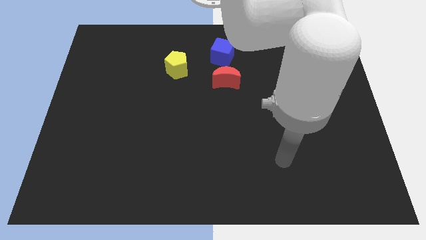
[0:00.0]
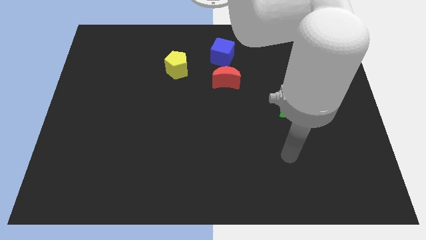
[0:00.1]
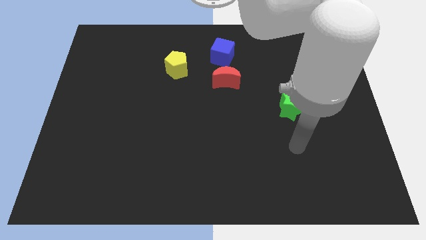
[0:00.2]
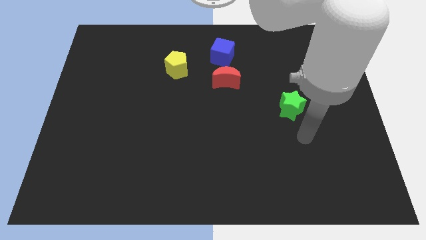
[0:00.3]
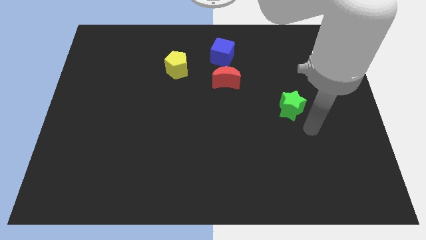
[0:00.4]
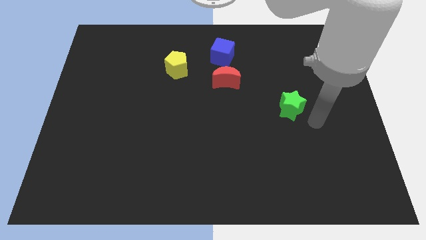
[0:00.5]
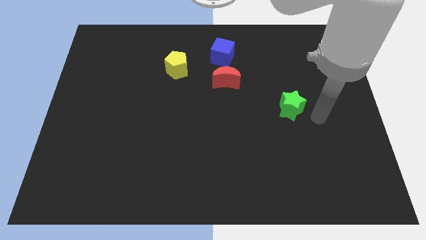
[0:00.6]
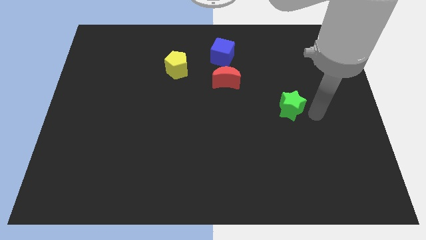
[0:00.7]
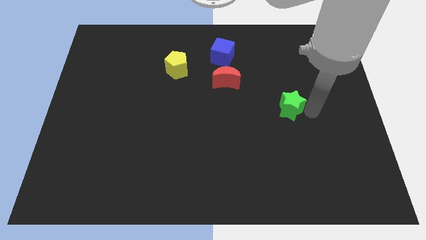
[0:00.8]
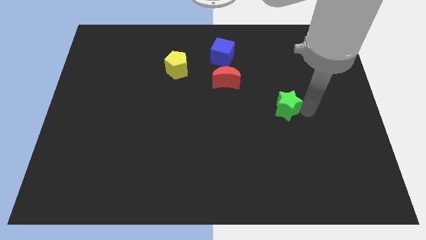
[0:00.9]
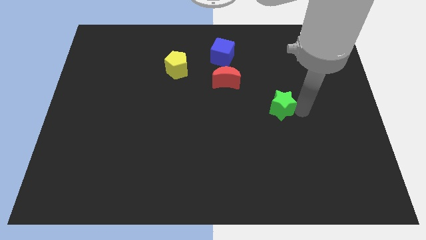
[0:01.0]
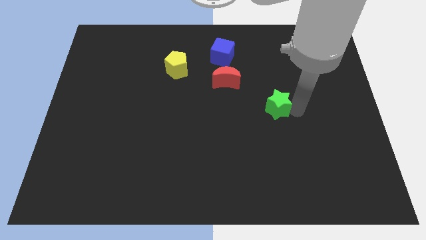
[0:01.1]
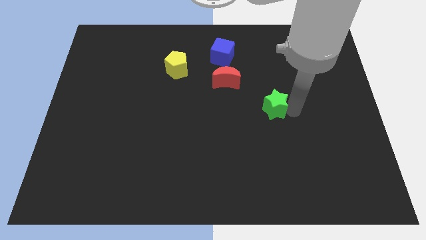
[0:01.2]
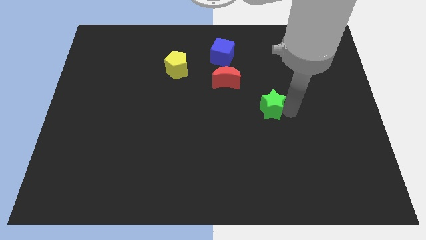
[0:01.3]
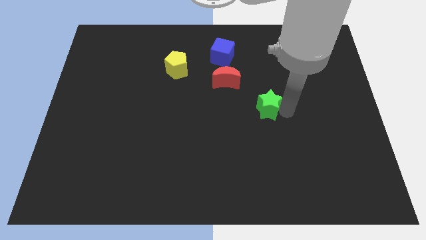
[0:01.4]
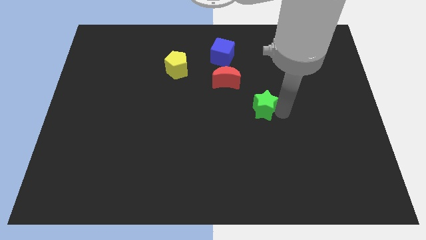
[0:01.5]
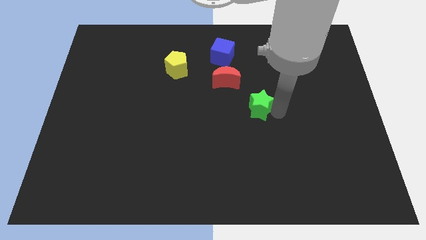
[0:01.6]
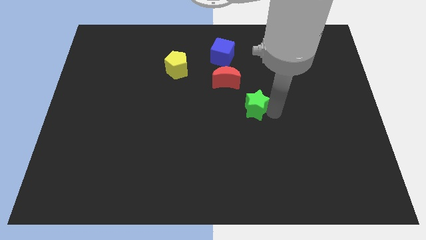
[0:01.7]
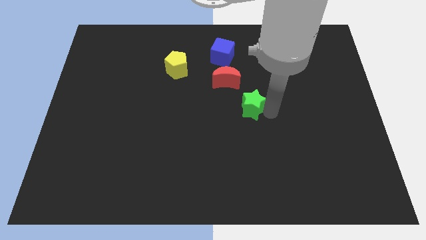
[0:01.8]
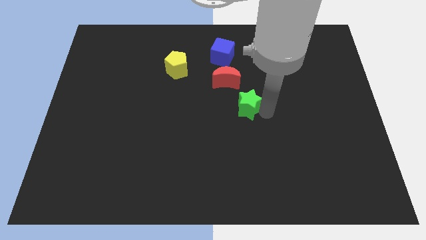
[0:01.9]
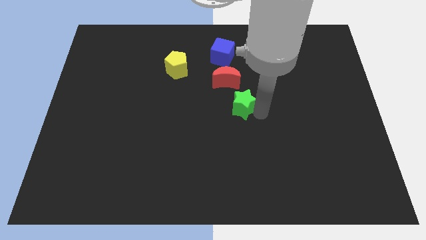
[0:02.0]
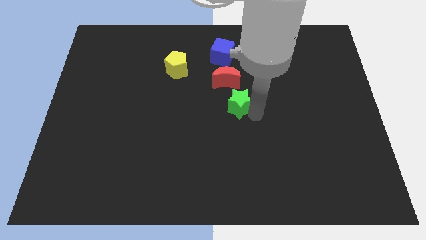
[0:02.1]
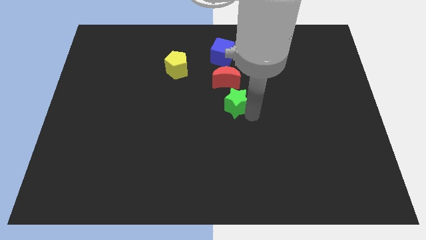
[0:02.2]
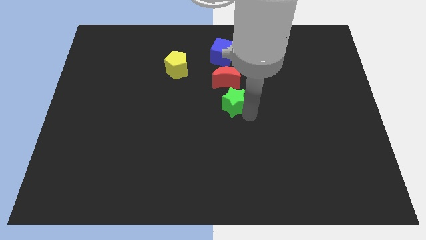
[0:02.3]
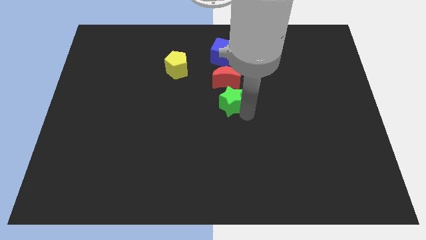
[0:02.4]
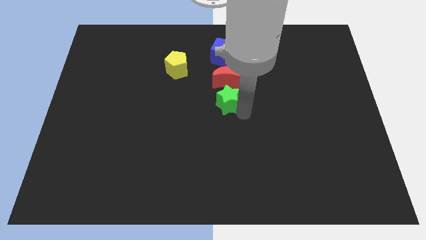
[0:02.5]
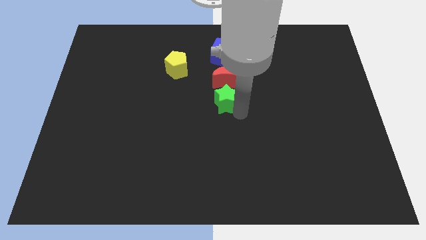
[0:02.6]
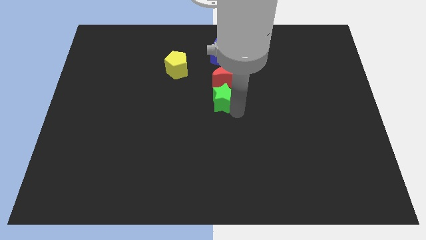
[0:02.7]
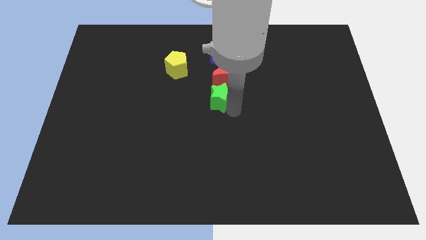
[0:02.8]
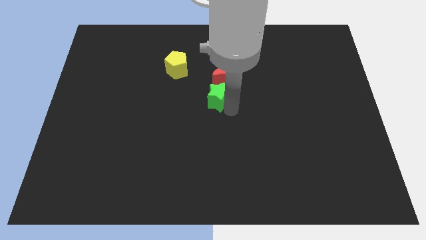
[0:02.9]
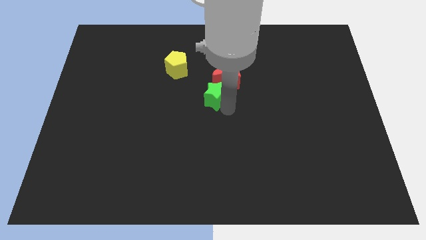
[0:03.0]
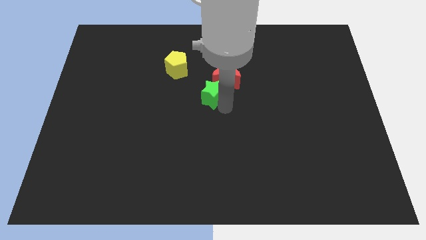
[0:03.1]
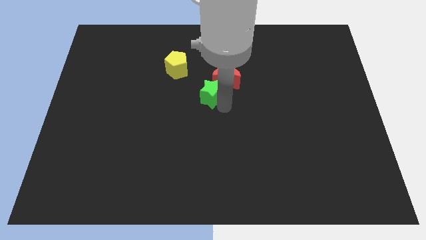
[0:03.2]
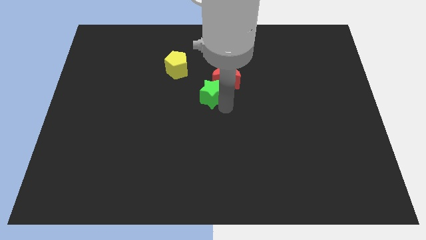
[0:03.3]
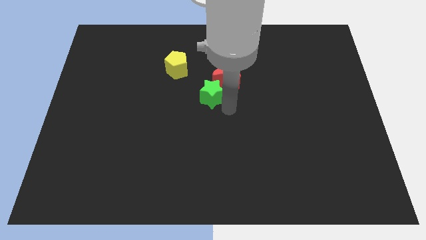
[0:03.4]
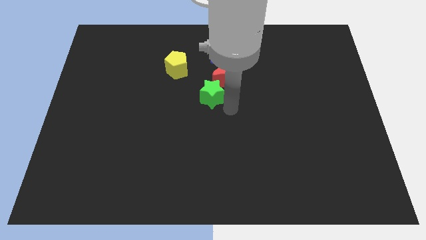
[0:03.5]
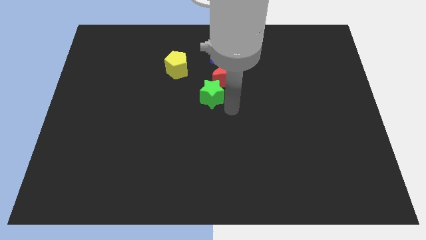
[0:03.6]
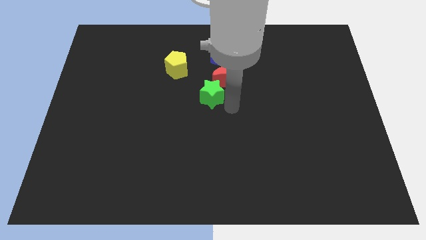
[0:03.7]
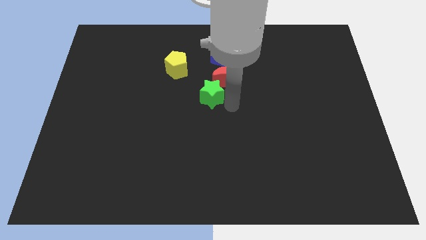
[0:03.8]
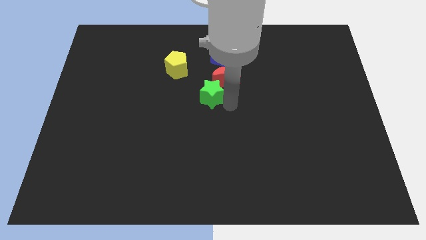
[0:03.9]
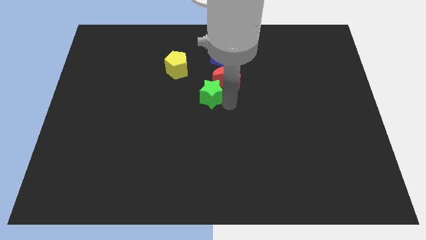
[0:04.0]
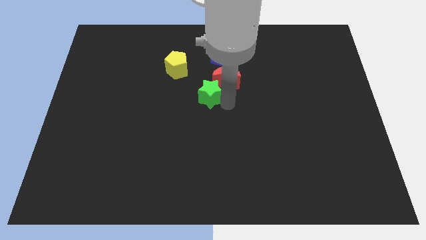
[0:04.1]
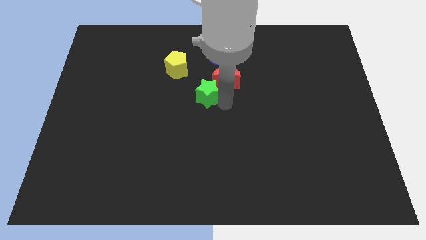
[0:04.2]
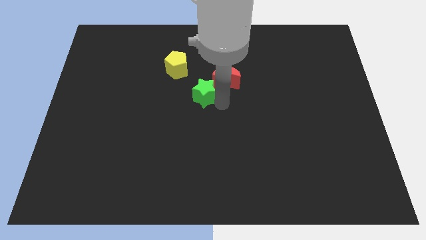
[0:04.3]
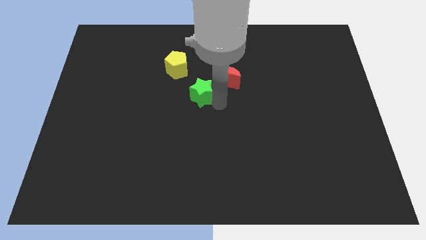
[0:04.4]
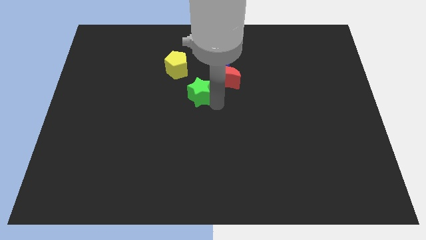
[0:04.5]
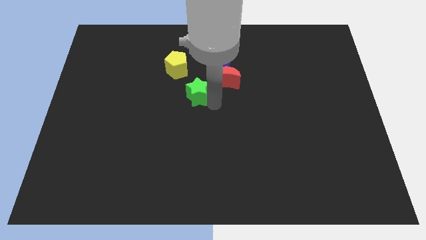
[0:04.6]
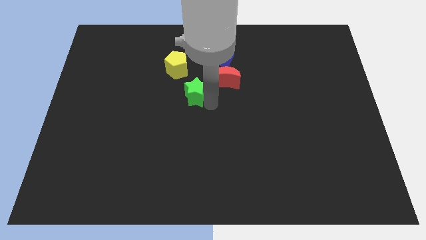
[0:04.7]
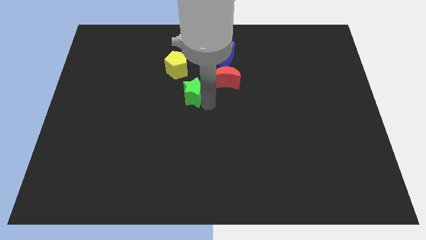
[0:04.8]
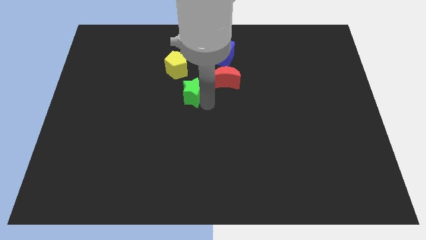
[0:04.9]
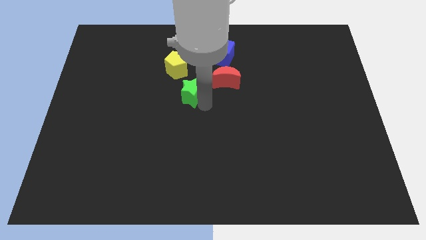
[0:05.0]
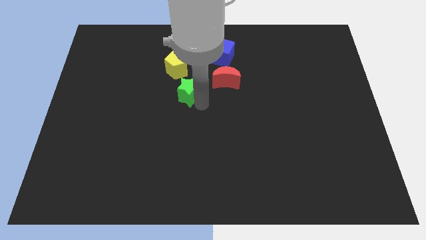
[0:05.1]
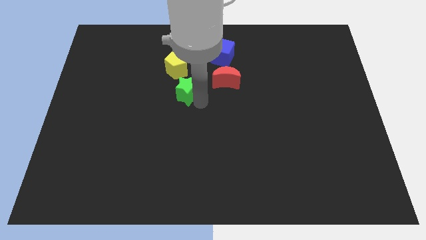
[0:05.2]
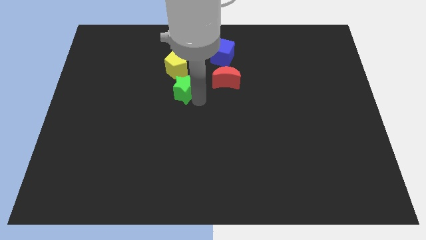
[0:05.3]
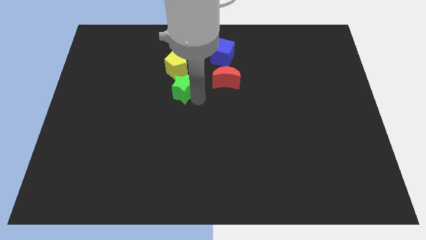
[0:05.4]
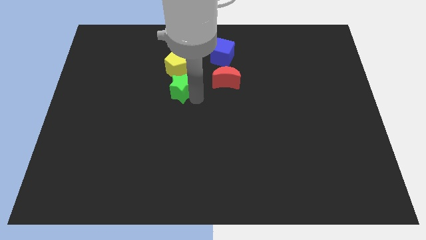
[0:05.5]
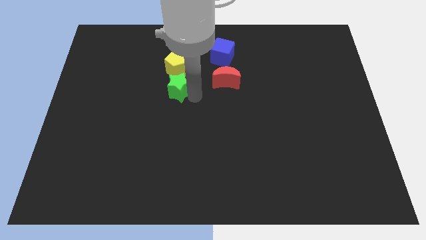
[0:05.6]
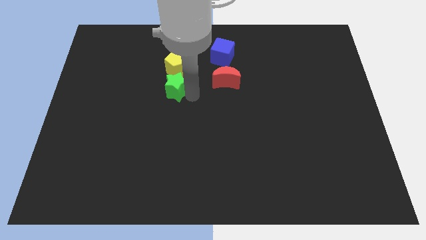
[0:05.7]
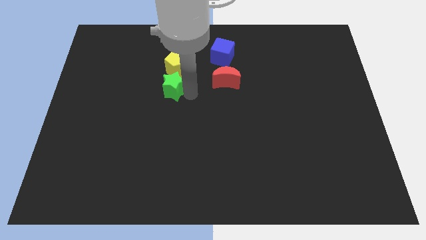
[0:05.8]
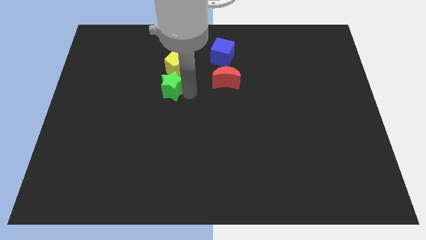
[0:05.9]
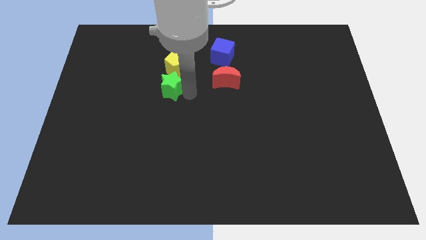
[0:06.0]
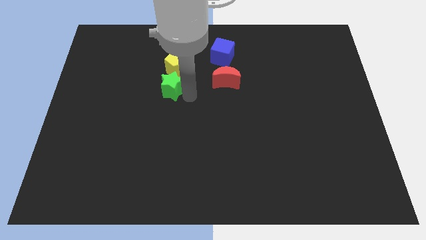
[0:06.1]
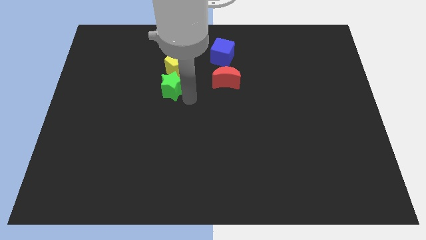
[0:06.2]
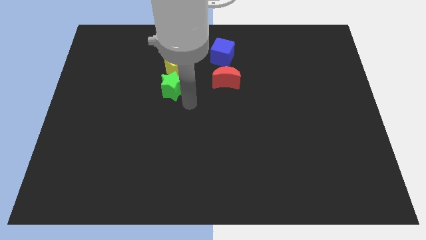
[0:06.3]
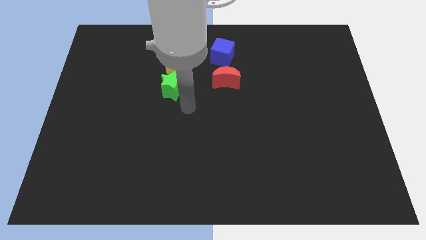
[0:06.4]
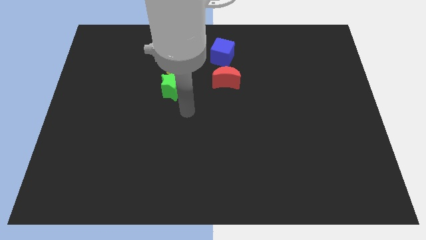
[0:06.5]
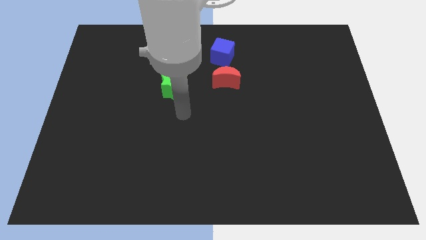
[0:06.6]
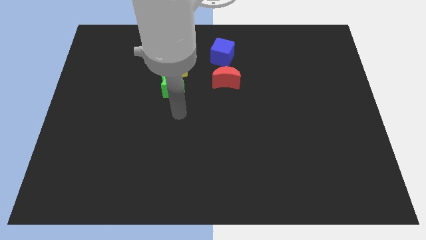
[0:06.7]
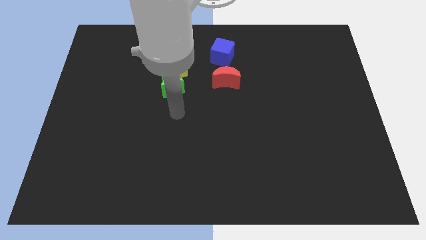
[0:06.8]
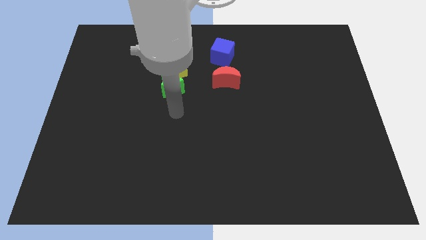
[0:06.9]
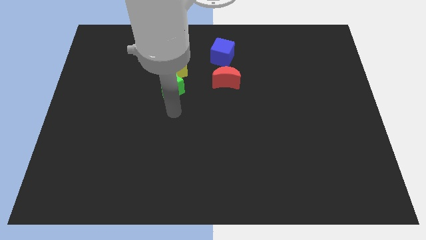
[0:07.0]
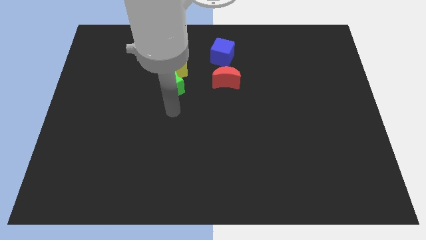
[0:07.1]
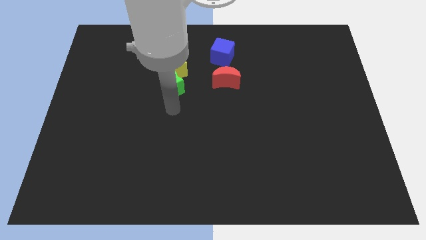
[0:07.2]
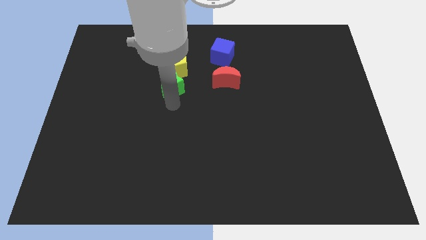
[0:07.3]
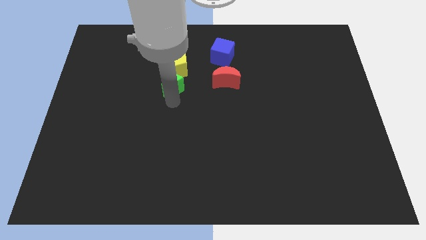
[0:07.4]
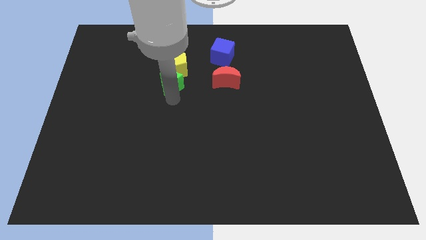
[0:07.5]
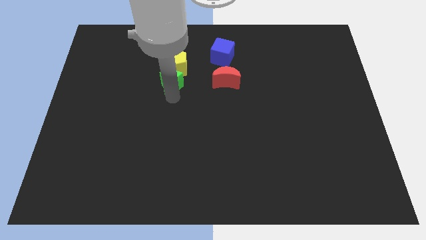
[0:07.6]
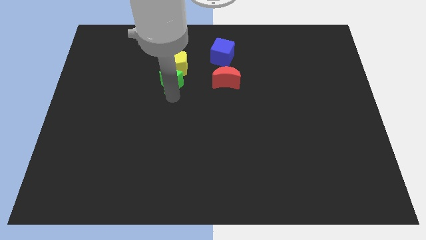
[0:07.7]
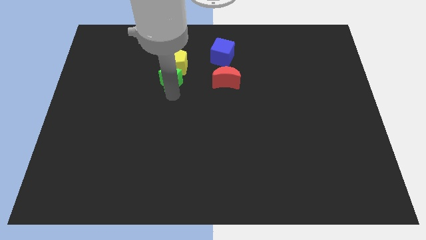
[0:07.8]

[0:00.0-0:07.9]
push the green star close to the yellow block

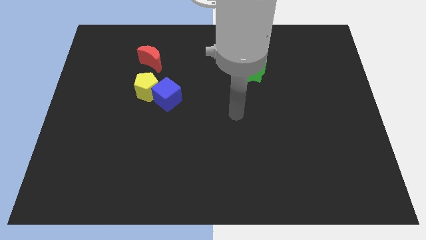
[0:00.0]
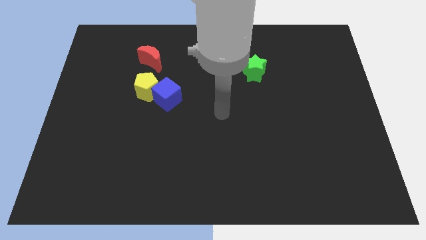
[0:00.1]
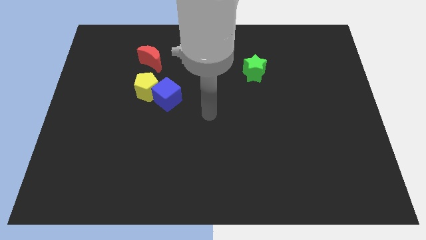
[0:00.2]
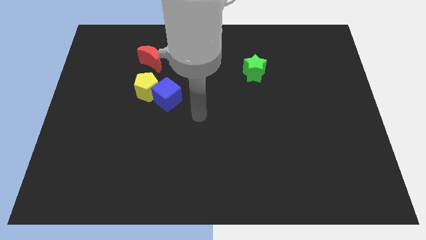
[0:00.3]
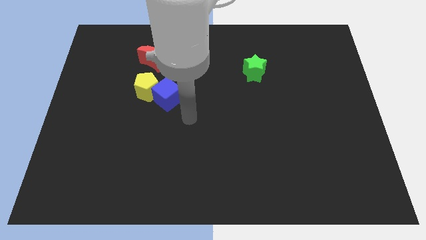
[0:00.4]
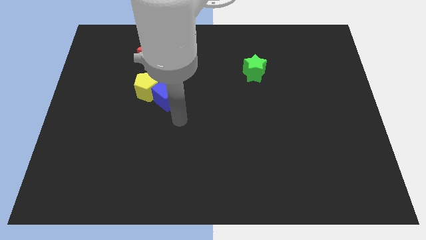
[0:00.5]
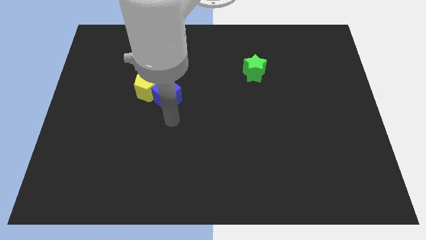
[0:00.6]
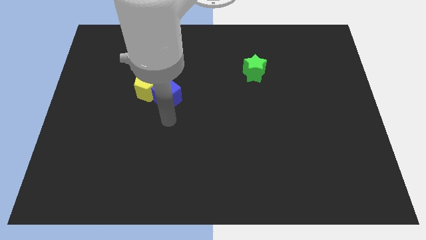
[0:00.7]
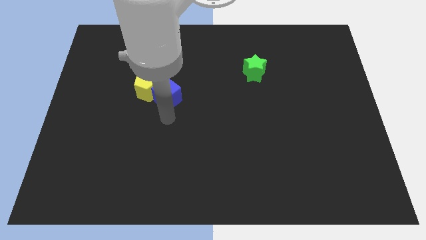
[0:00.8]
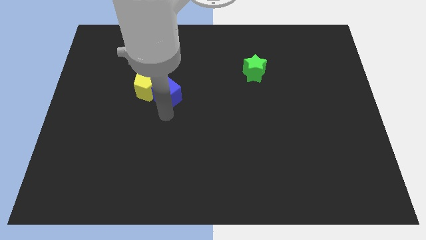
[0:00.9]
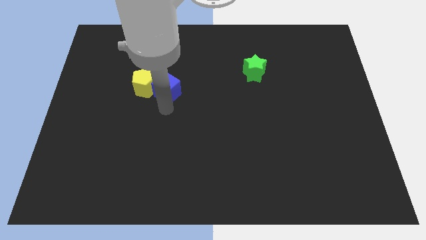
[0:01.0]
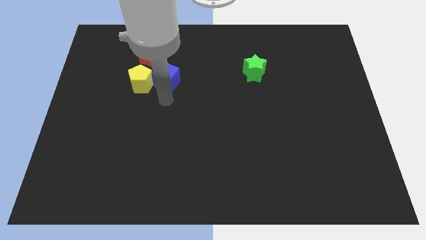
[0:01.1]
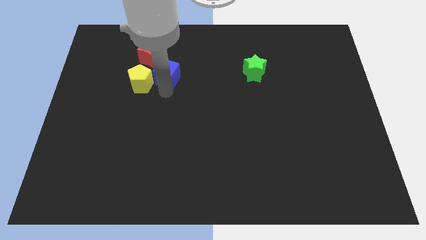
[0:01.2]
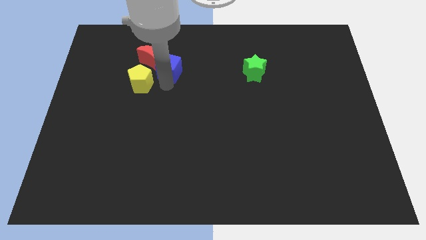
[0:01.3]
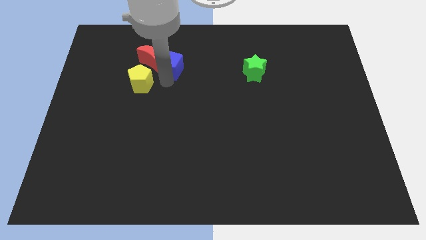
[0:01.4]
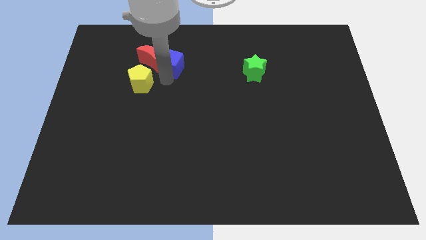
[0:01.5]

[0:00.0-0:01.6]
slide the blue block towards the red block
